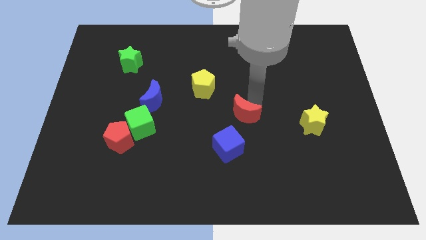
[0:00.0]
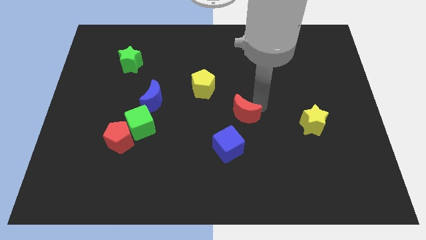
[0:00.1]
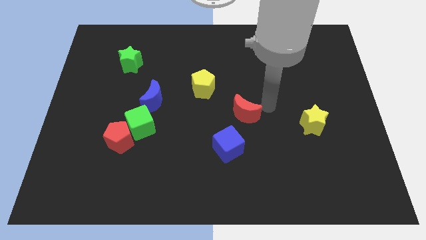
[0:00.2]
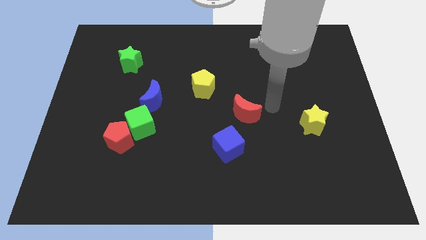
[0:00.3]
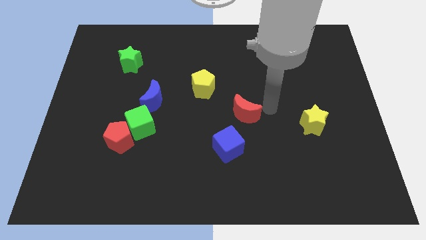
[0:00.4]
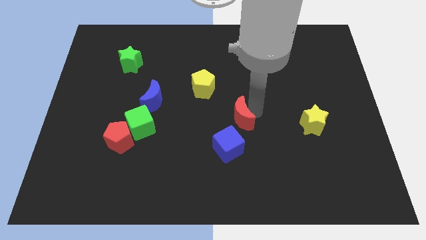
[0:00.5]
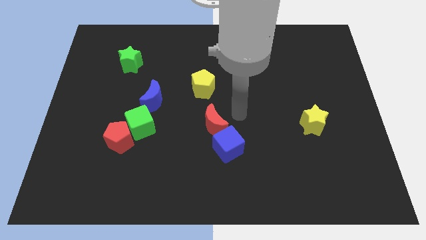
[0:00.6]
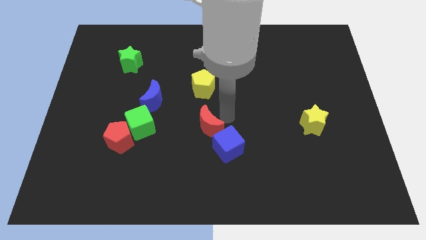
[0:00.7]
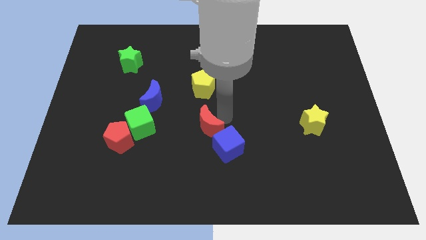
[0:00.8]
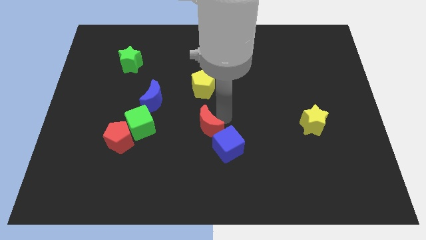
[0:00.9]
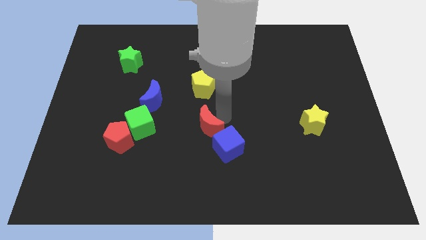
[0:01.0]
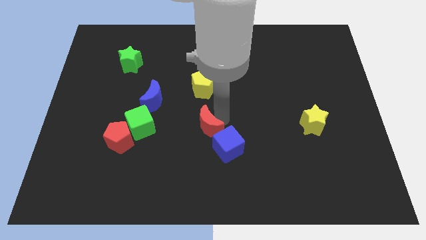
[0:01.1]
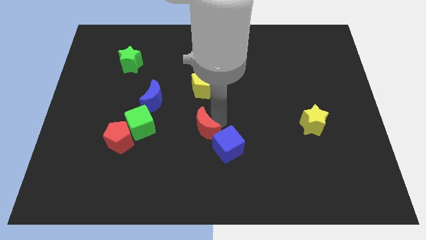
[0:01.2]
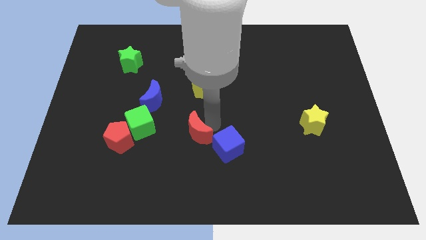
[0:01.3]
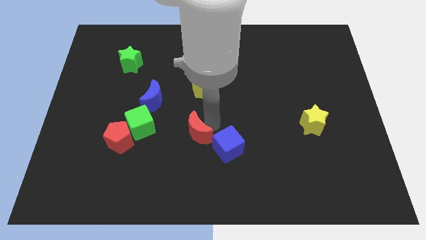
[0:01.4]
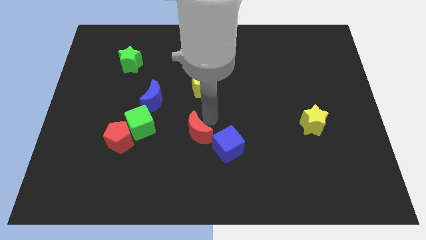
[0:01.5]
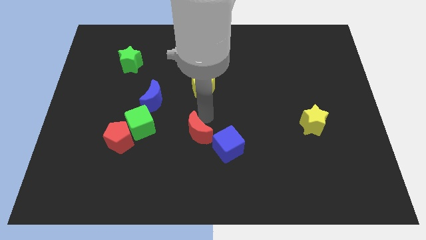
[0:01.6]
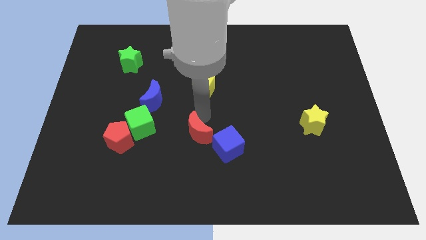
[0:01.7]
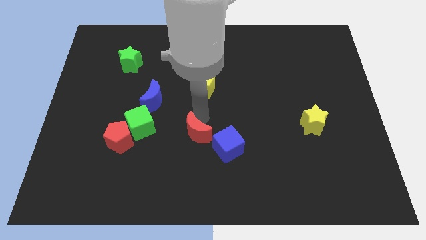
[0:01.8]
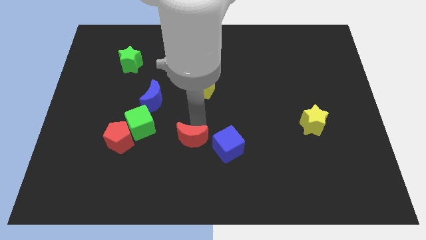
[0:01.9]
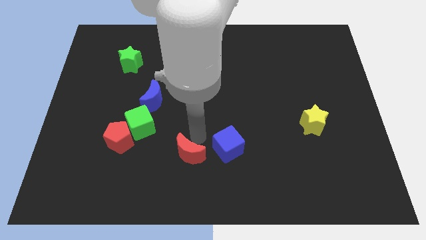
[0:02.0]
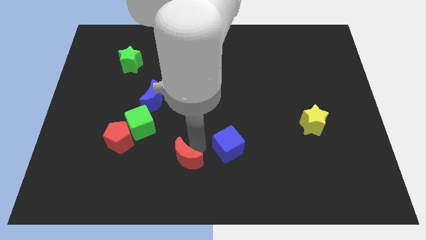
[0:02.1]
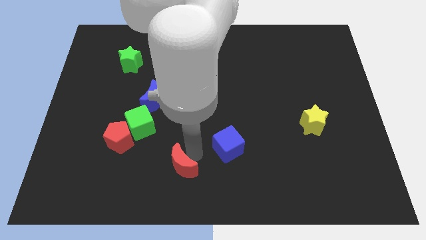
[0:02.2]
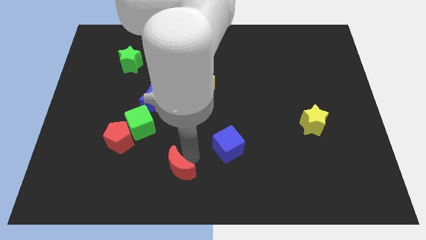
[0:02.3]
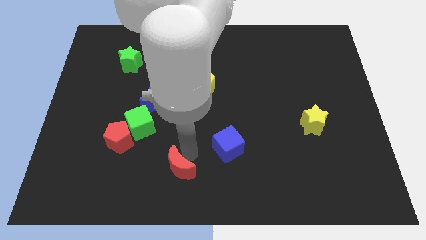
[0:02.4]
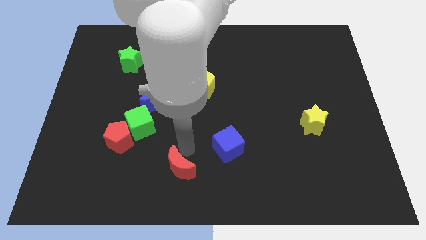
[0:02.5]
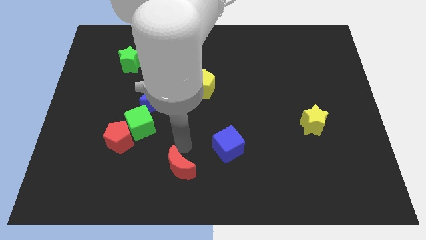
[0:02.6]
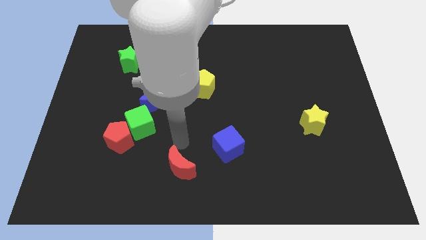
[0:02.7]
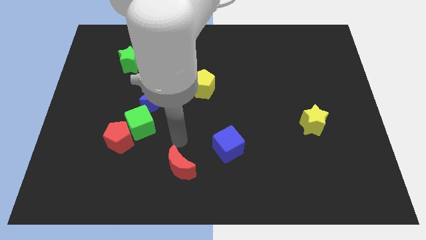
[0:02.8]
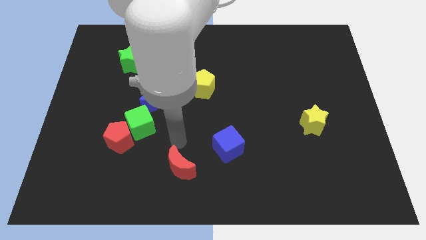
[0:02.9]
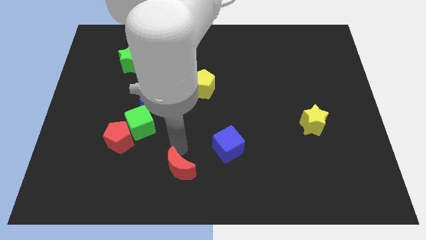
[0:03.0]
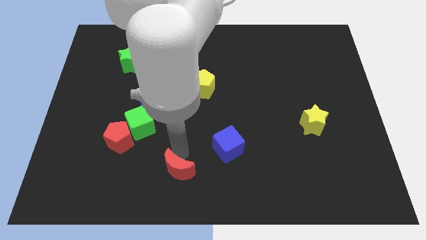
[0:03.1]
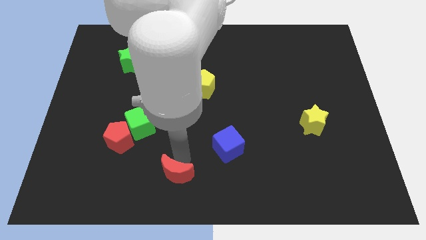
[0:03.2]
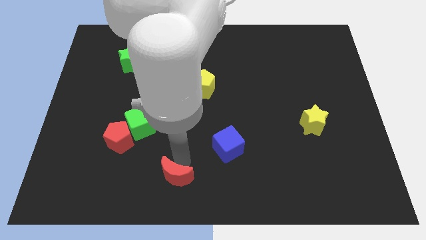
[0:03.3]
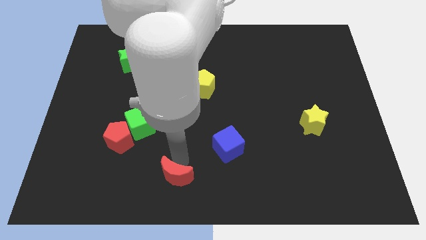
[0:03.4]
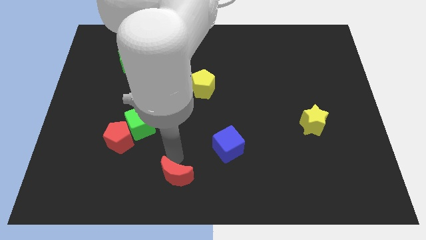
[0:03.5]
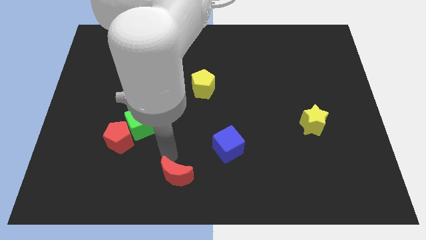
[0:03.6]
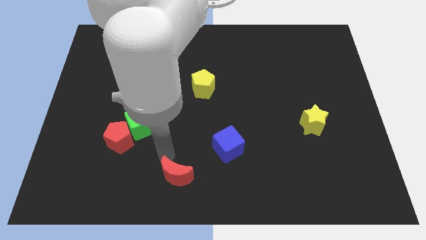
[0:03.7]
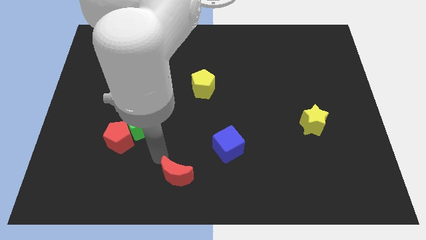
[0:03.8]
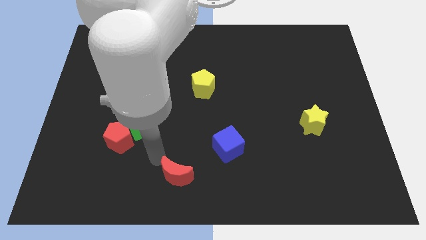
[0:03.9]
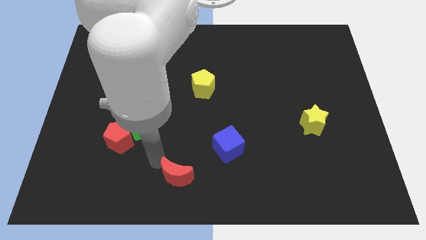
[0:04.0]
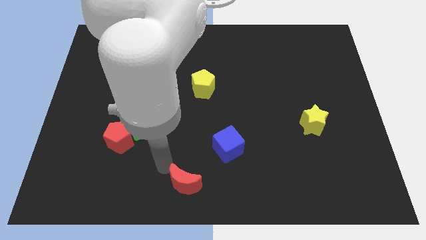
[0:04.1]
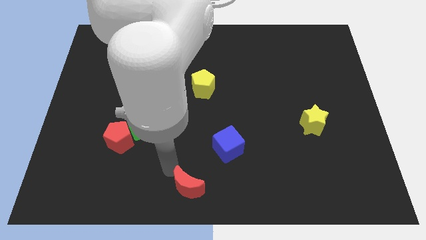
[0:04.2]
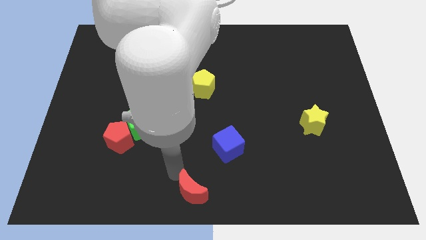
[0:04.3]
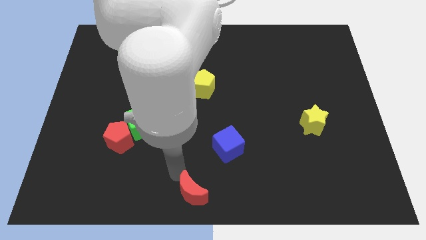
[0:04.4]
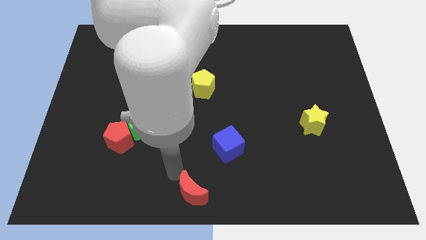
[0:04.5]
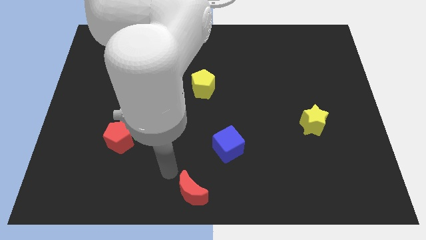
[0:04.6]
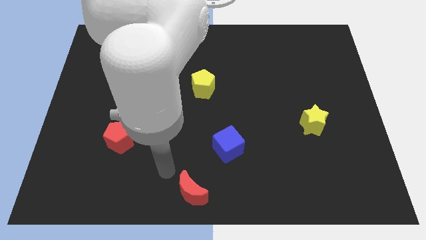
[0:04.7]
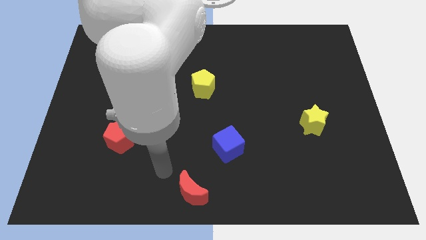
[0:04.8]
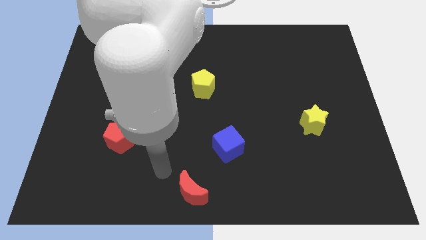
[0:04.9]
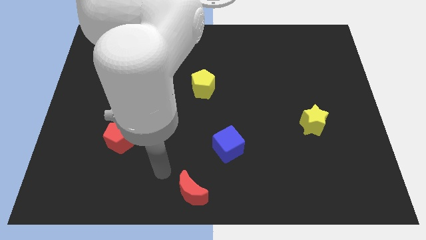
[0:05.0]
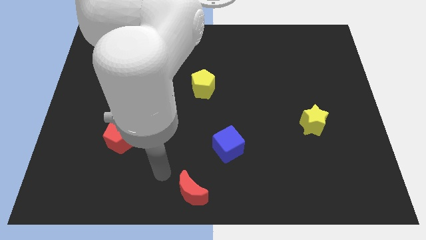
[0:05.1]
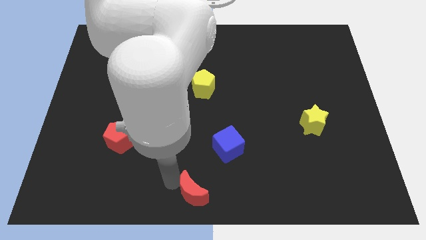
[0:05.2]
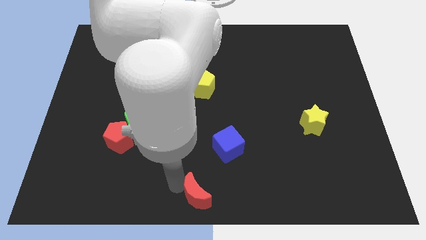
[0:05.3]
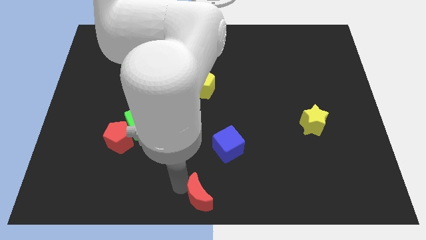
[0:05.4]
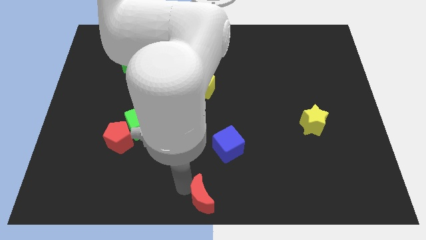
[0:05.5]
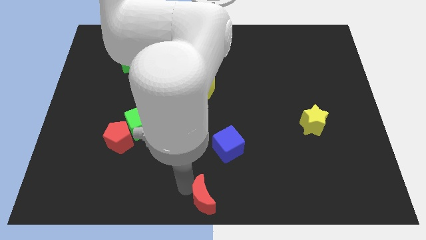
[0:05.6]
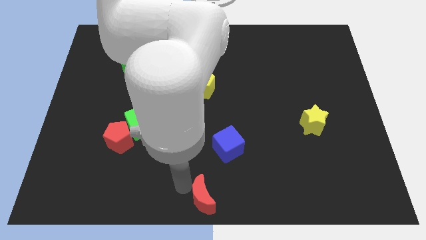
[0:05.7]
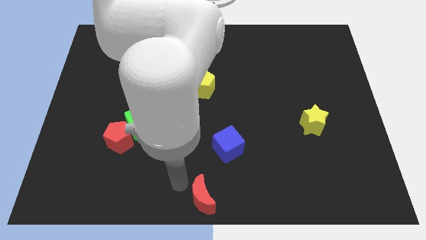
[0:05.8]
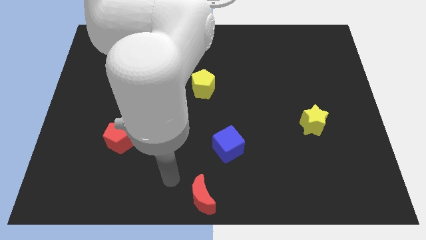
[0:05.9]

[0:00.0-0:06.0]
place the red crescent at the bottom center of the board

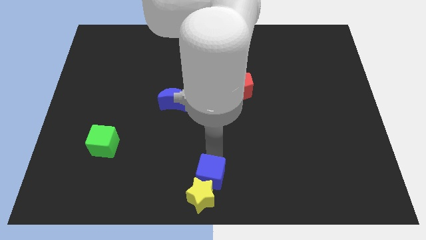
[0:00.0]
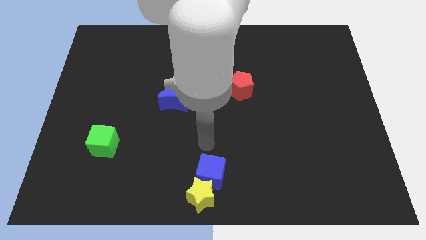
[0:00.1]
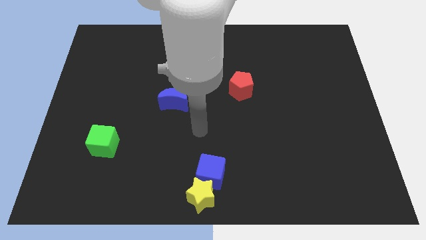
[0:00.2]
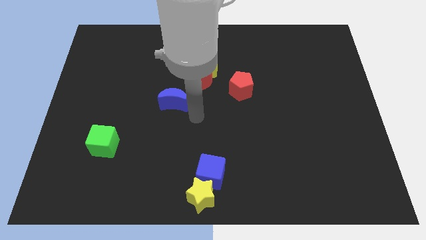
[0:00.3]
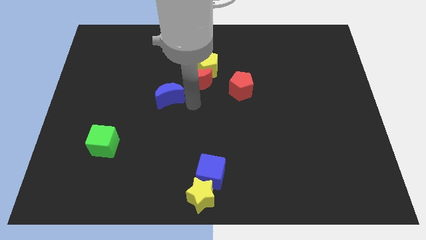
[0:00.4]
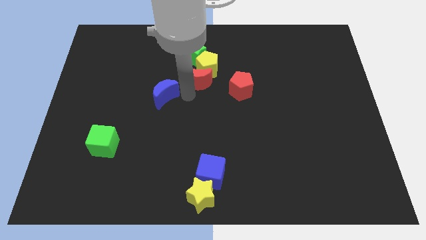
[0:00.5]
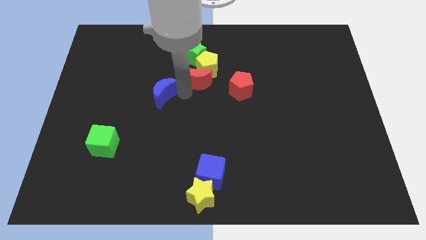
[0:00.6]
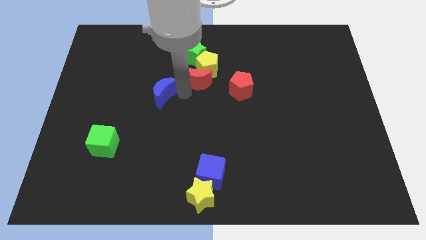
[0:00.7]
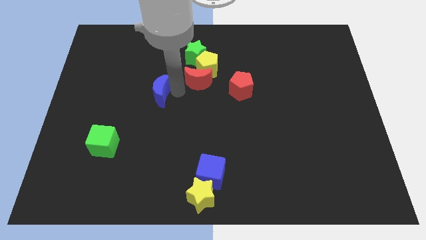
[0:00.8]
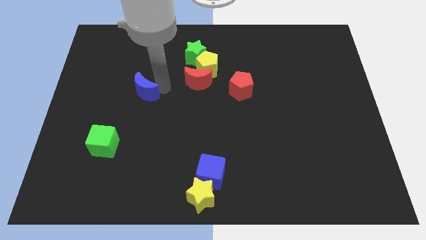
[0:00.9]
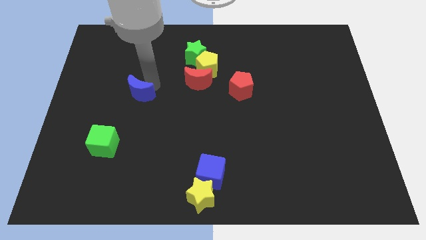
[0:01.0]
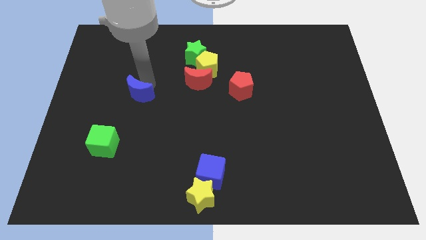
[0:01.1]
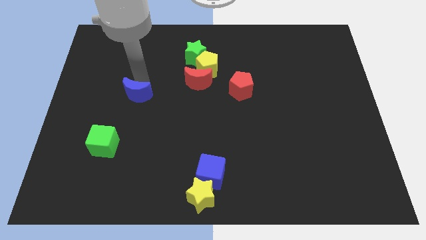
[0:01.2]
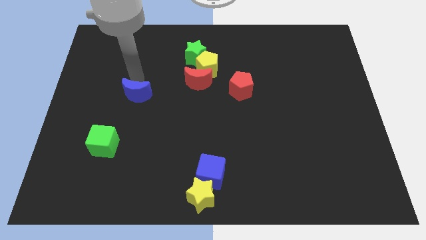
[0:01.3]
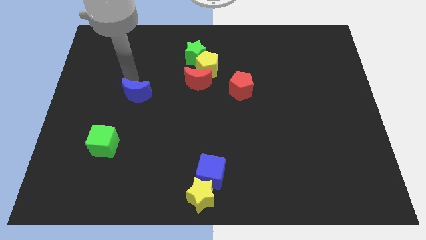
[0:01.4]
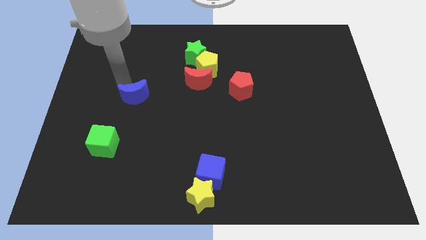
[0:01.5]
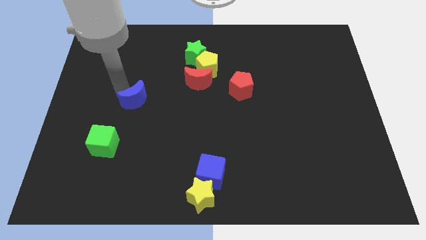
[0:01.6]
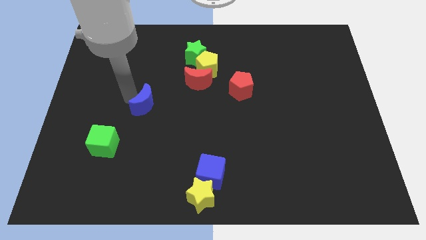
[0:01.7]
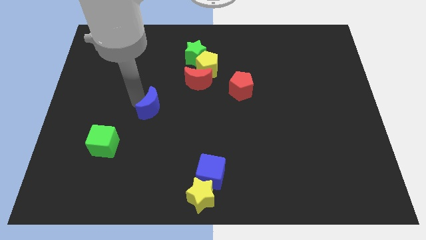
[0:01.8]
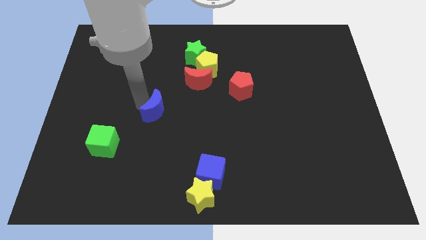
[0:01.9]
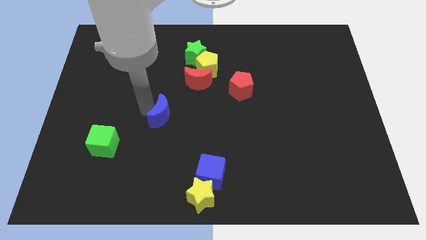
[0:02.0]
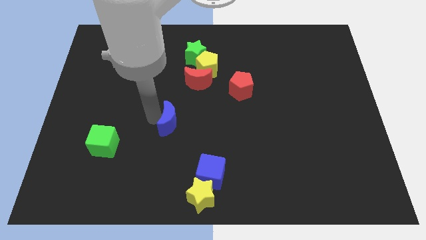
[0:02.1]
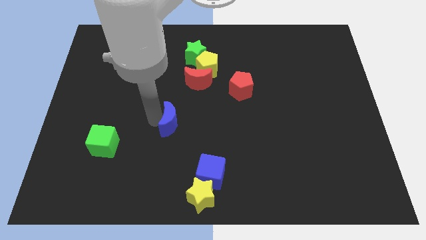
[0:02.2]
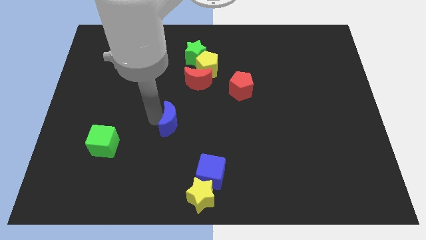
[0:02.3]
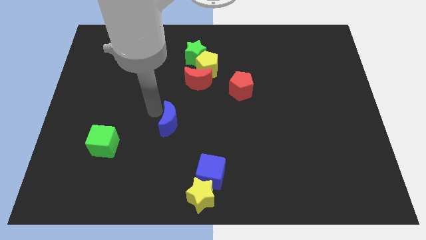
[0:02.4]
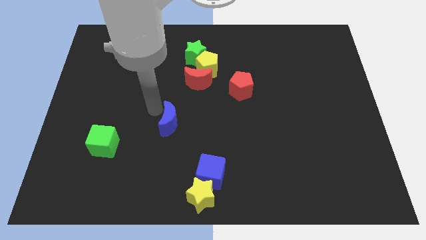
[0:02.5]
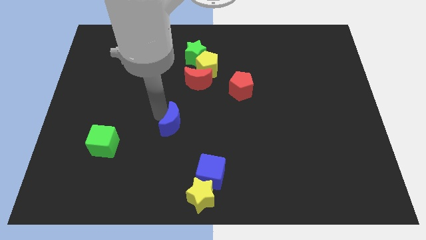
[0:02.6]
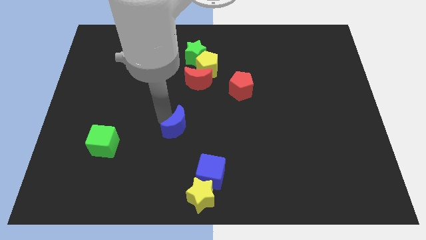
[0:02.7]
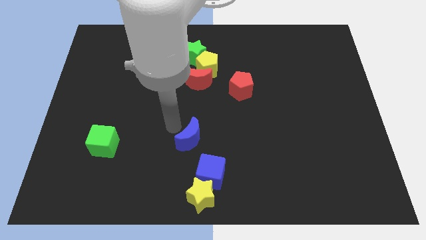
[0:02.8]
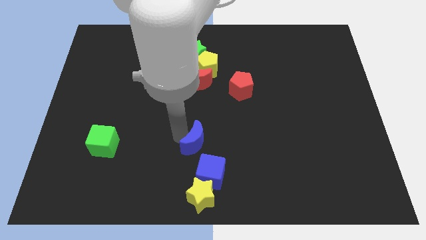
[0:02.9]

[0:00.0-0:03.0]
move the blue crescent to the top left of the blue cube

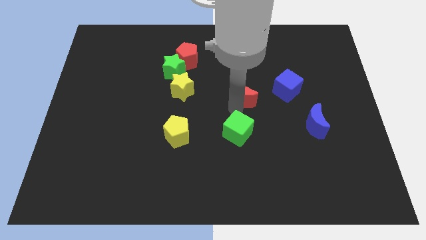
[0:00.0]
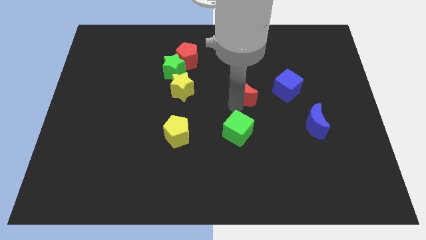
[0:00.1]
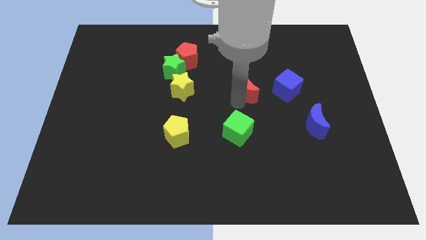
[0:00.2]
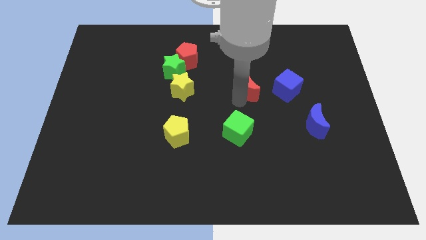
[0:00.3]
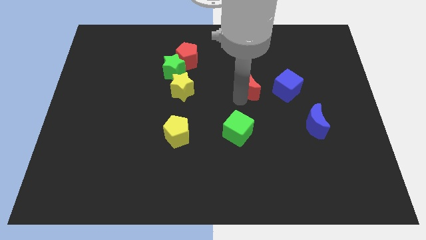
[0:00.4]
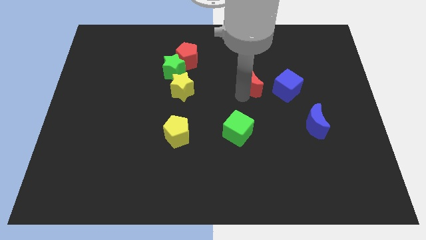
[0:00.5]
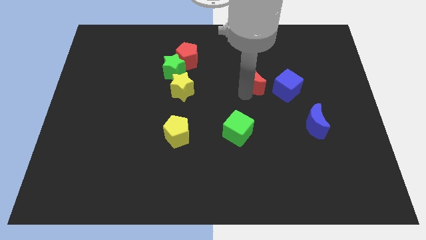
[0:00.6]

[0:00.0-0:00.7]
push the red crescent to the left side of the blue cube
